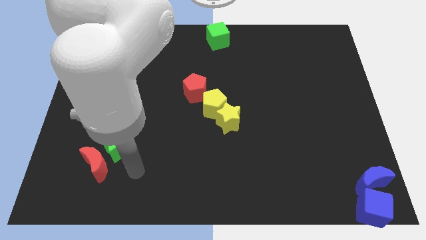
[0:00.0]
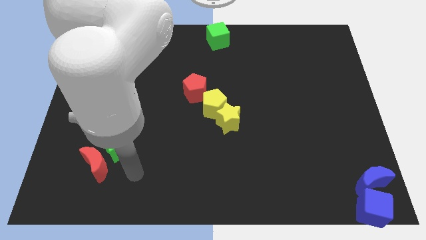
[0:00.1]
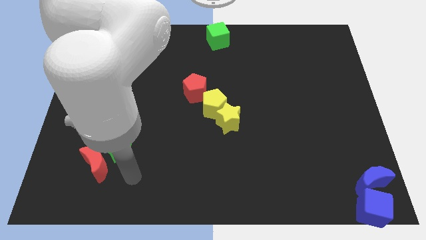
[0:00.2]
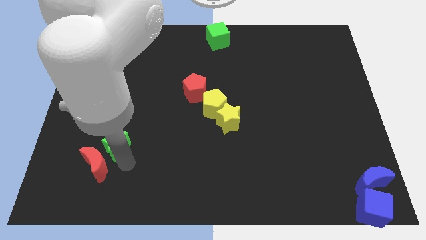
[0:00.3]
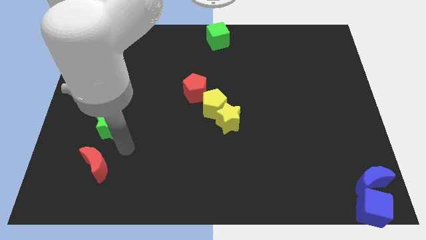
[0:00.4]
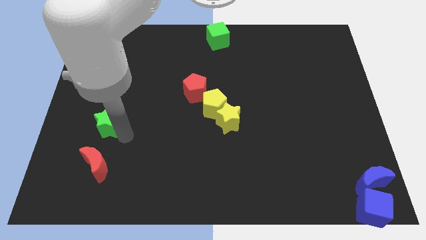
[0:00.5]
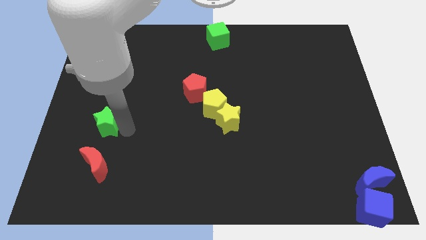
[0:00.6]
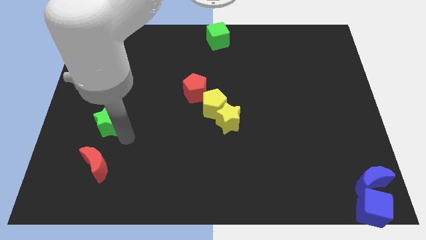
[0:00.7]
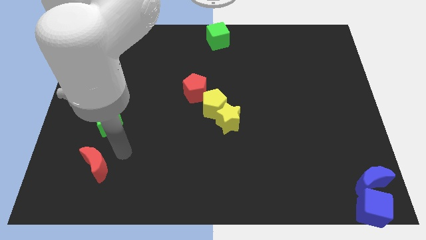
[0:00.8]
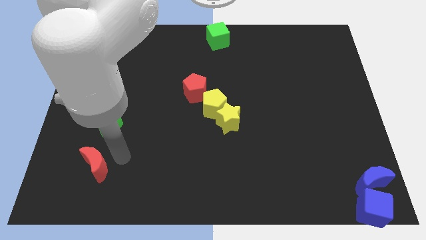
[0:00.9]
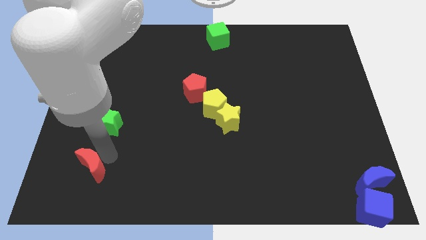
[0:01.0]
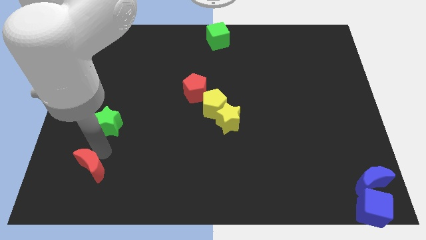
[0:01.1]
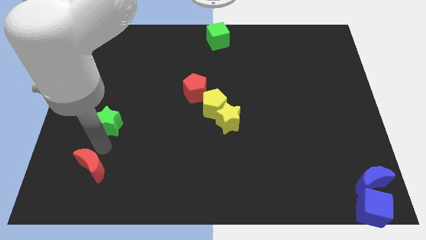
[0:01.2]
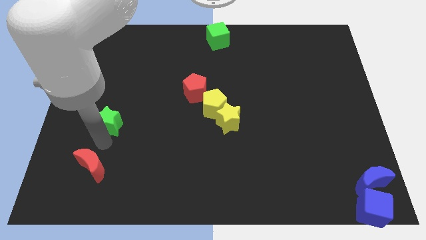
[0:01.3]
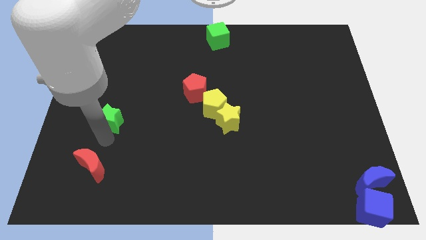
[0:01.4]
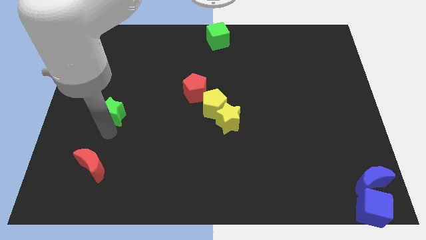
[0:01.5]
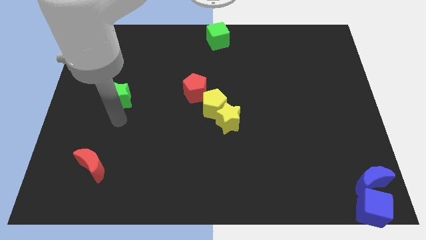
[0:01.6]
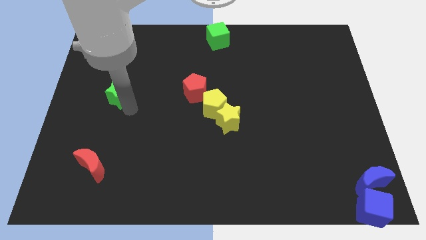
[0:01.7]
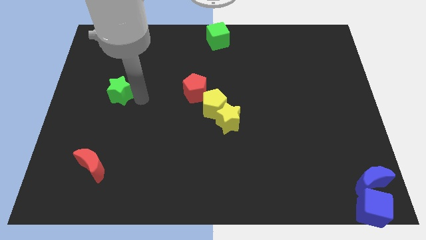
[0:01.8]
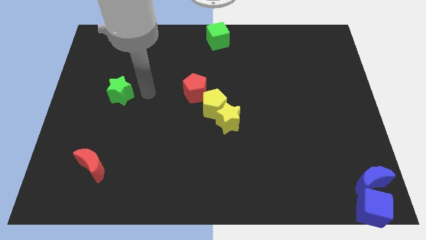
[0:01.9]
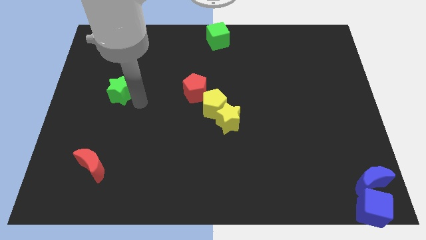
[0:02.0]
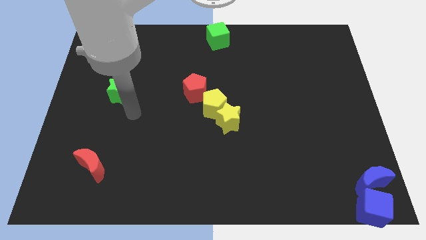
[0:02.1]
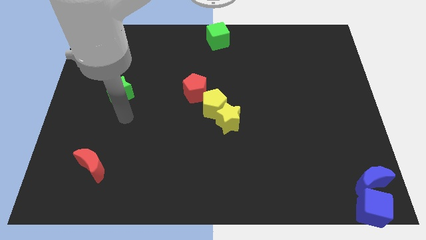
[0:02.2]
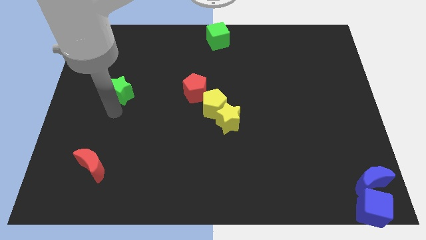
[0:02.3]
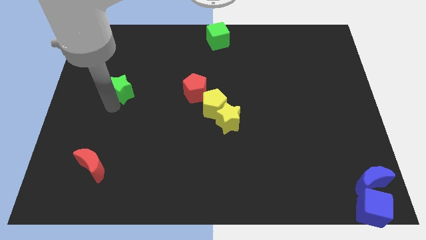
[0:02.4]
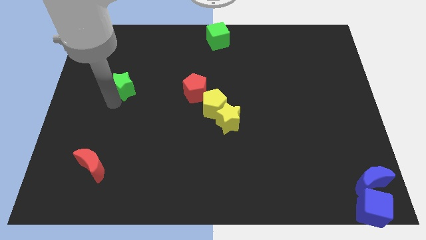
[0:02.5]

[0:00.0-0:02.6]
place the green star parallel left to the red pentagon

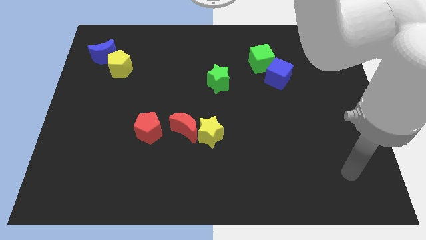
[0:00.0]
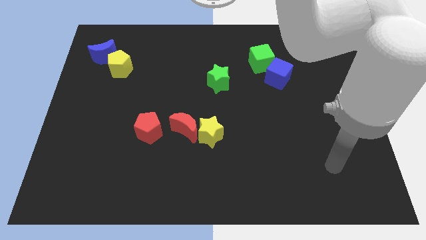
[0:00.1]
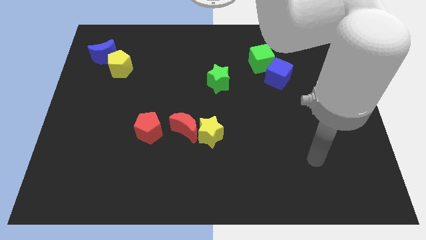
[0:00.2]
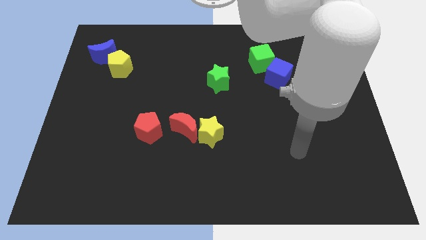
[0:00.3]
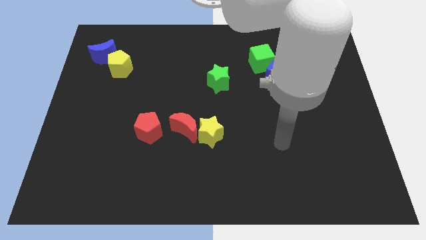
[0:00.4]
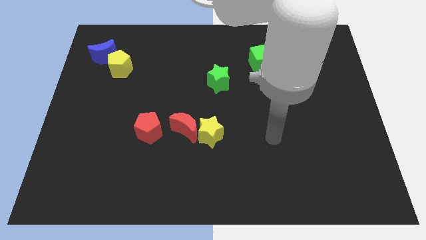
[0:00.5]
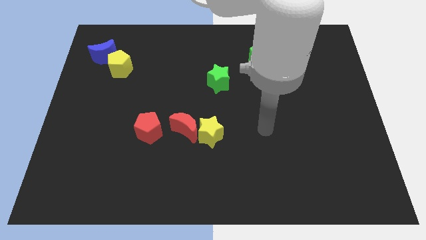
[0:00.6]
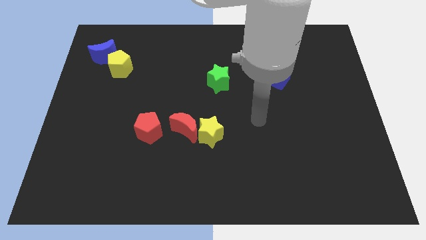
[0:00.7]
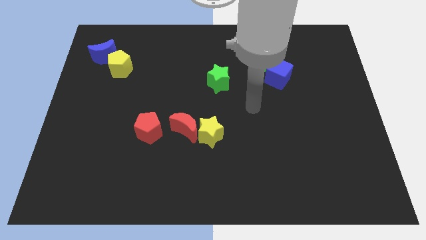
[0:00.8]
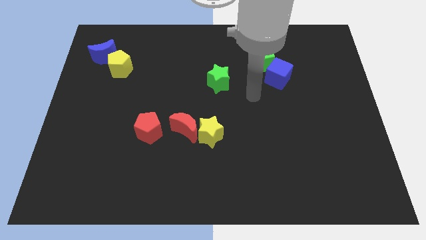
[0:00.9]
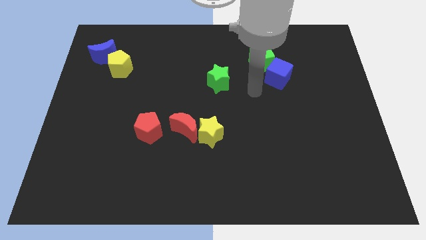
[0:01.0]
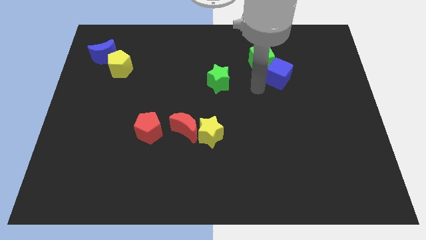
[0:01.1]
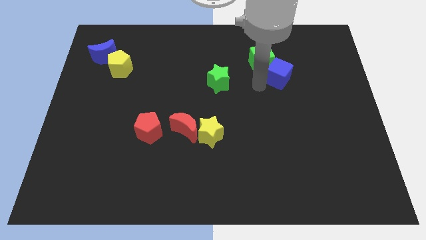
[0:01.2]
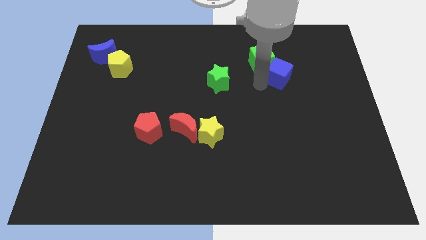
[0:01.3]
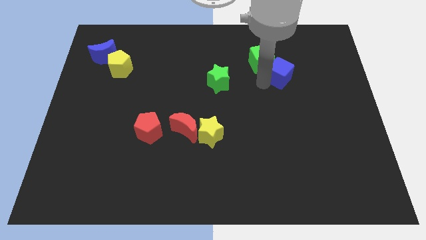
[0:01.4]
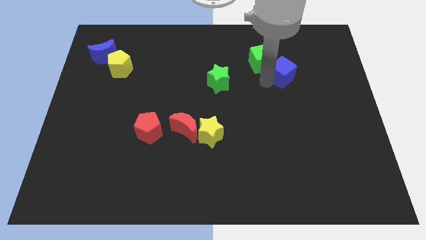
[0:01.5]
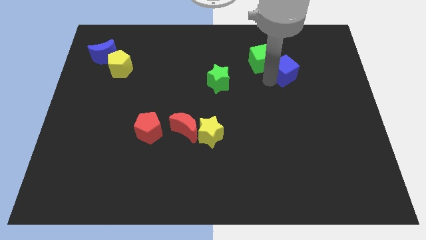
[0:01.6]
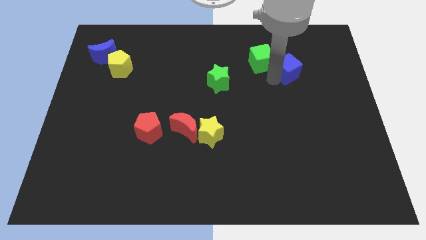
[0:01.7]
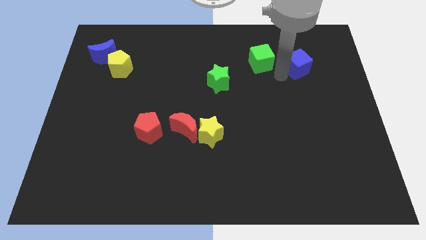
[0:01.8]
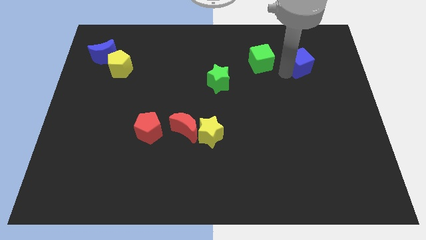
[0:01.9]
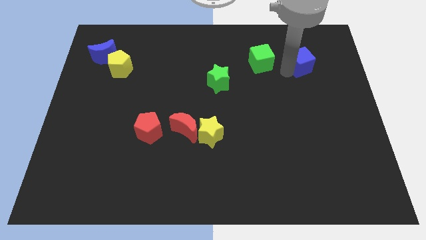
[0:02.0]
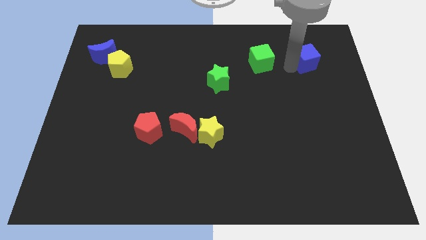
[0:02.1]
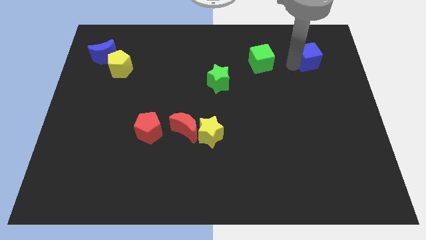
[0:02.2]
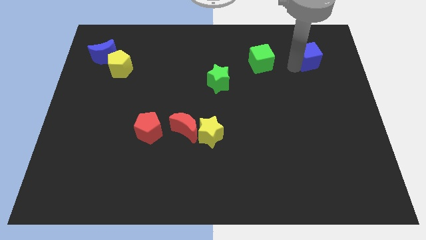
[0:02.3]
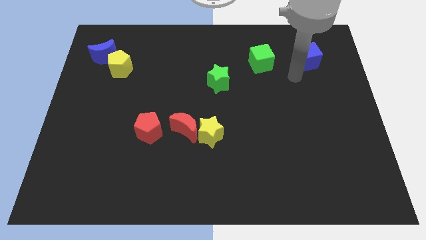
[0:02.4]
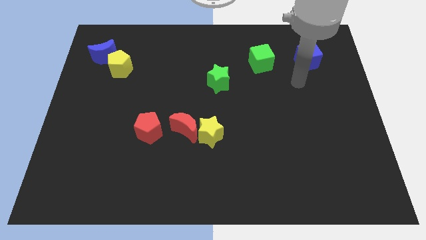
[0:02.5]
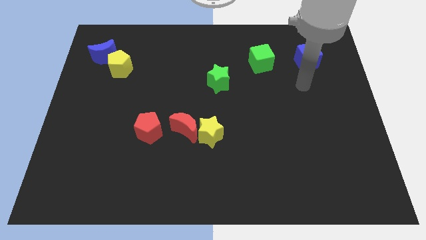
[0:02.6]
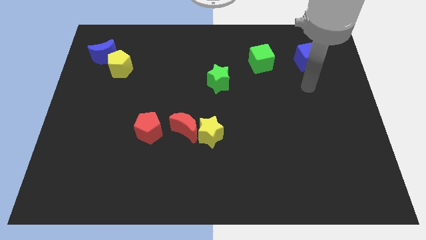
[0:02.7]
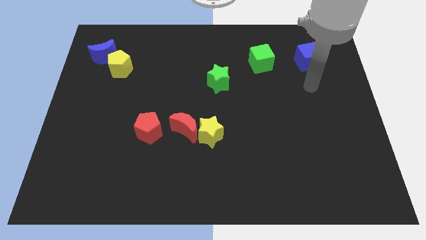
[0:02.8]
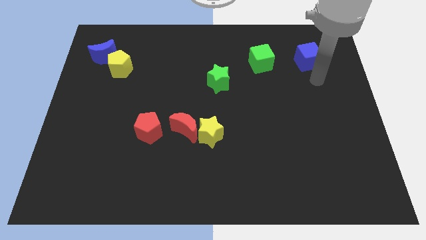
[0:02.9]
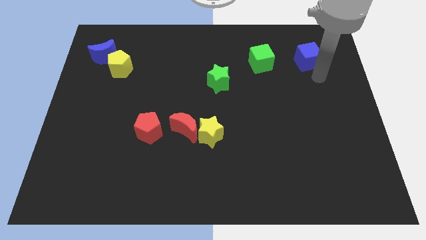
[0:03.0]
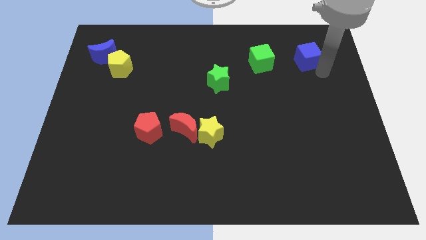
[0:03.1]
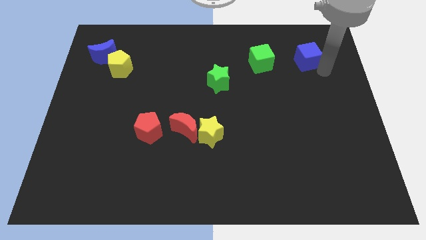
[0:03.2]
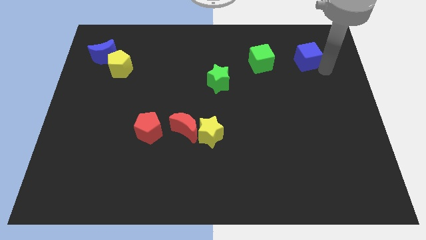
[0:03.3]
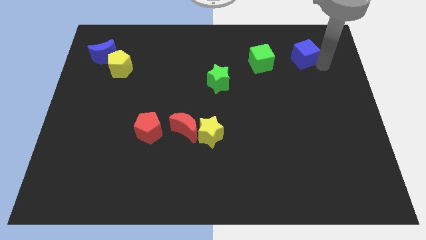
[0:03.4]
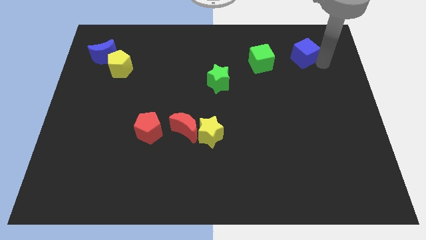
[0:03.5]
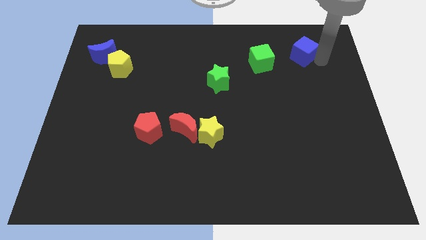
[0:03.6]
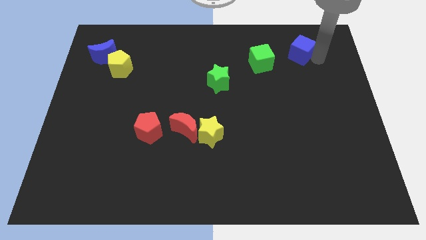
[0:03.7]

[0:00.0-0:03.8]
push the blue cube to the right of the green cube

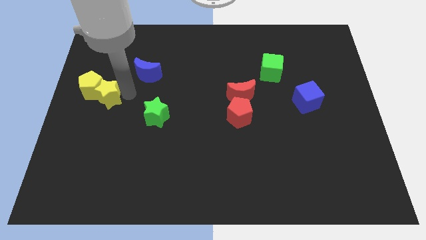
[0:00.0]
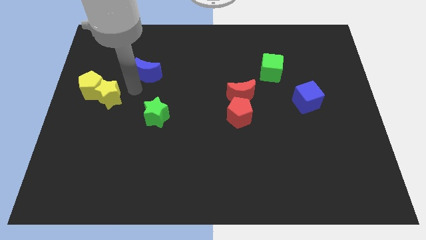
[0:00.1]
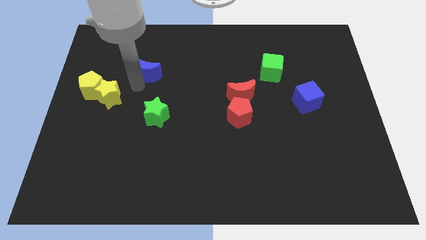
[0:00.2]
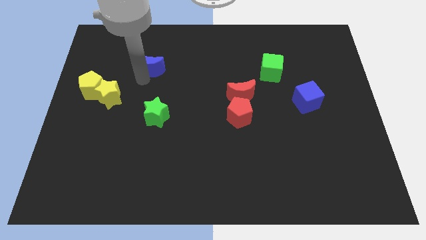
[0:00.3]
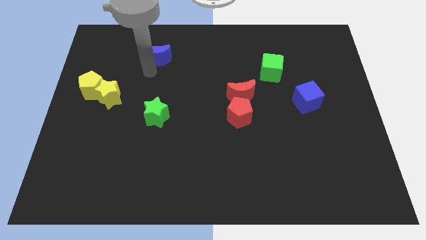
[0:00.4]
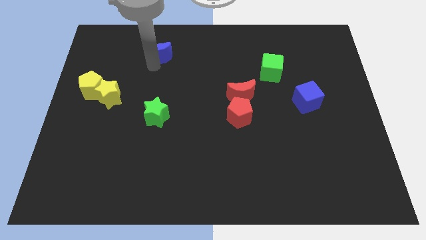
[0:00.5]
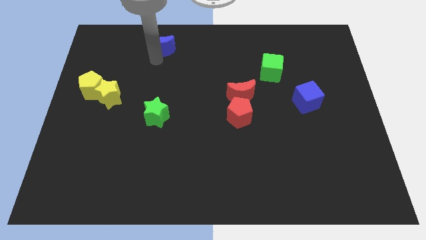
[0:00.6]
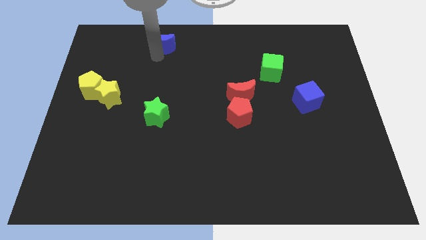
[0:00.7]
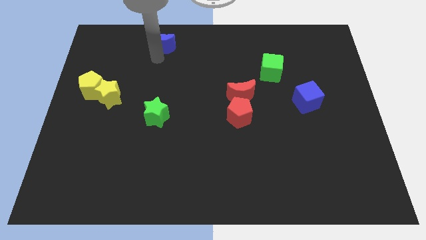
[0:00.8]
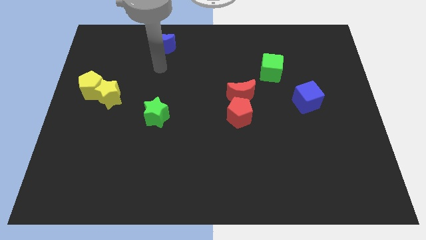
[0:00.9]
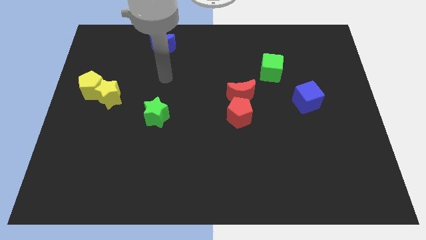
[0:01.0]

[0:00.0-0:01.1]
move the blue moon to the top side of the table

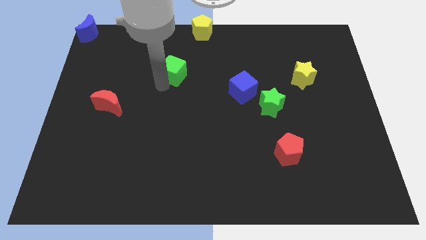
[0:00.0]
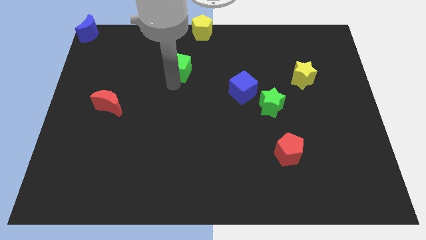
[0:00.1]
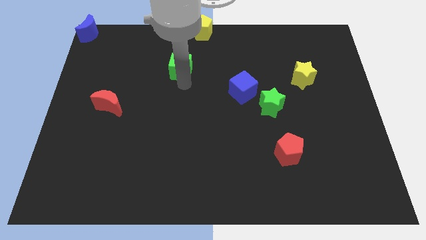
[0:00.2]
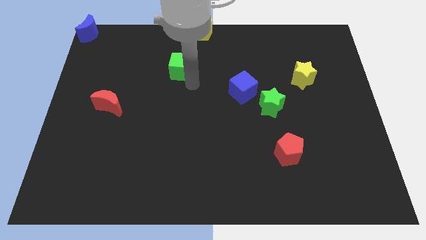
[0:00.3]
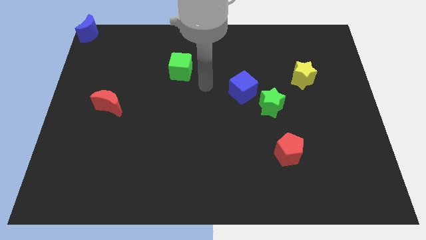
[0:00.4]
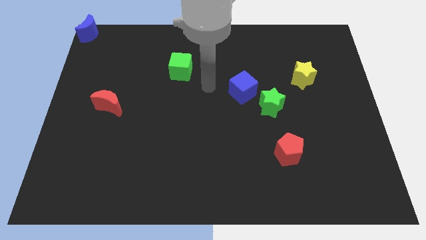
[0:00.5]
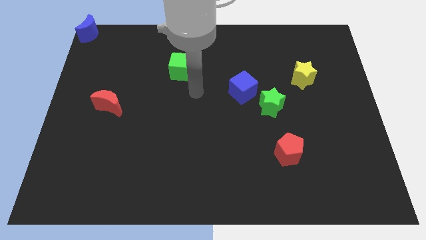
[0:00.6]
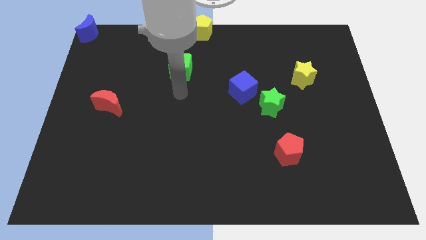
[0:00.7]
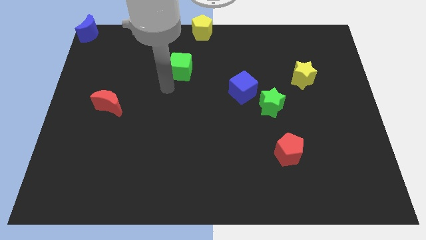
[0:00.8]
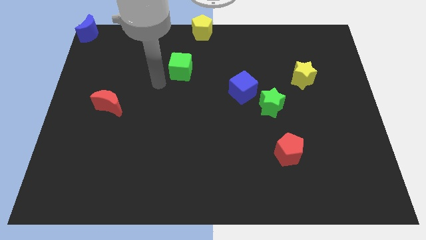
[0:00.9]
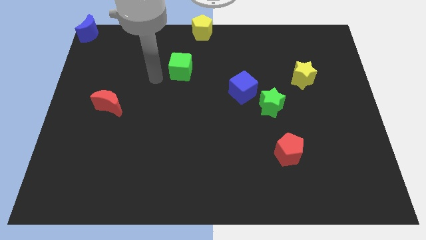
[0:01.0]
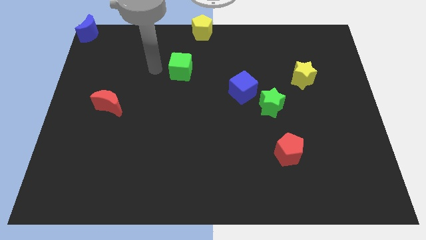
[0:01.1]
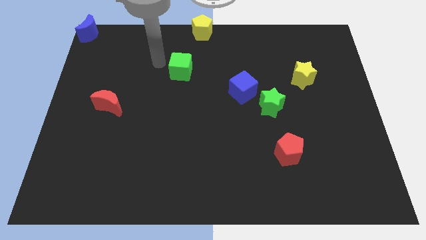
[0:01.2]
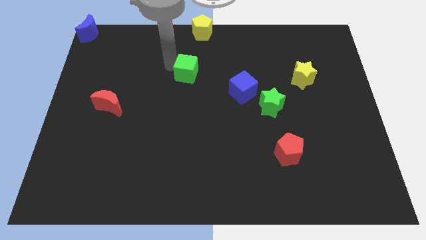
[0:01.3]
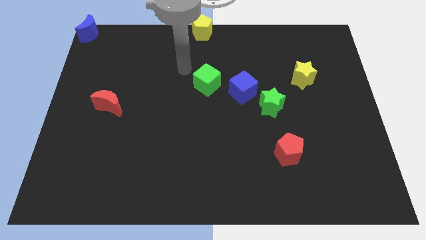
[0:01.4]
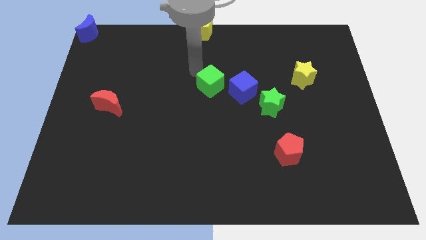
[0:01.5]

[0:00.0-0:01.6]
slide the green cube vertically below the yellow pentagon

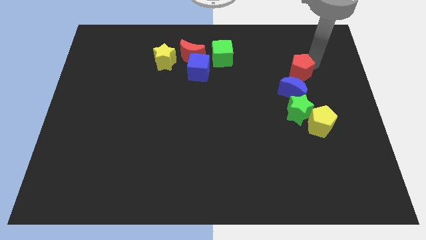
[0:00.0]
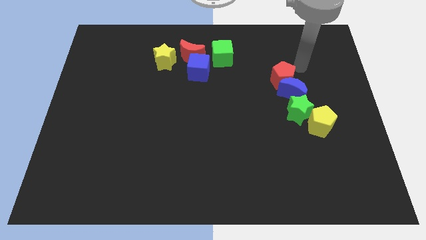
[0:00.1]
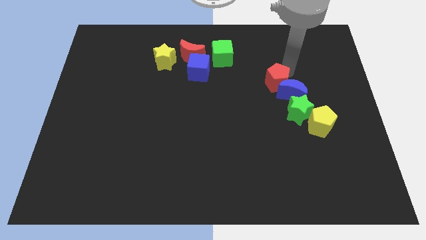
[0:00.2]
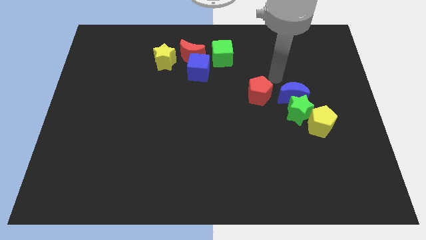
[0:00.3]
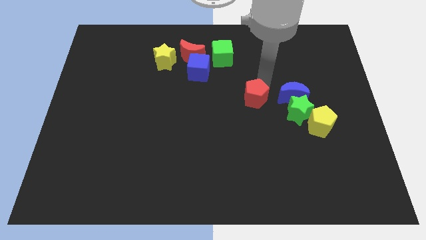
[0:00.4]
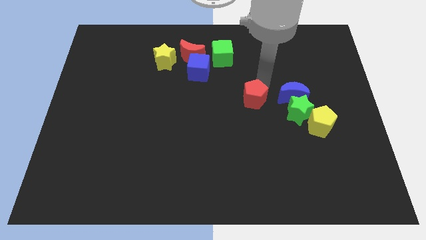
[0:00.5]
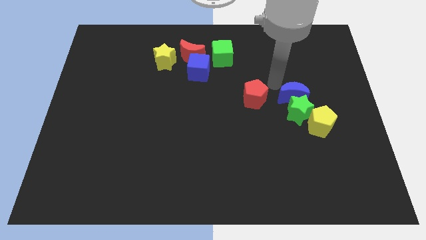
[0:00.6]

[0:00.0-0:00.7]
move the red pentagon parallel to the blue cube
